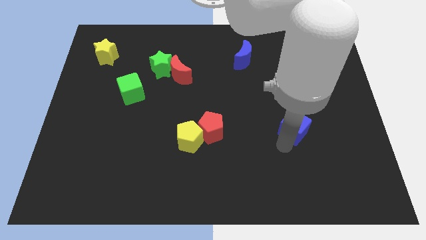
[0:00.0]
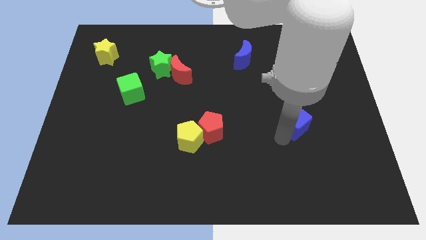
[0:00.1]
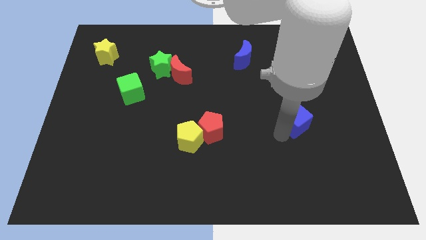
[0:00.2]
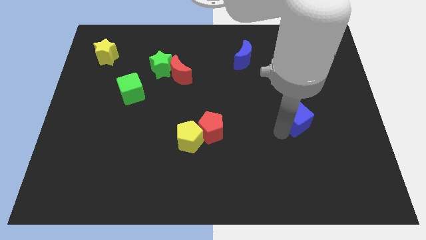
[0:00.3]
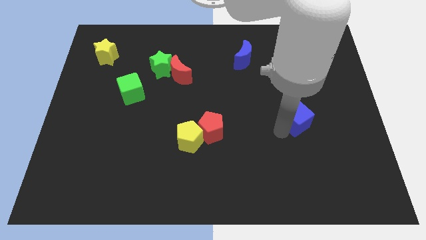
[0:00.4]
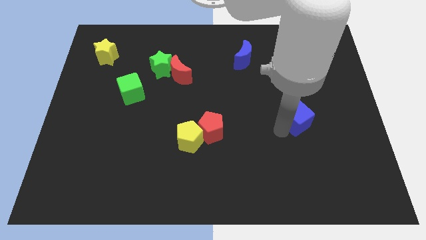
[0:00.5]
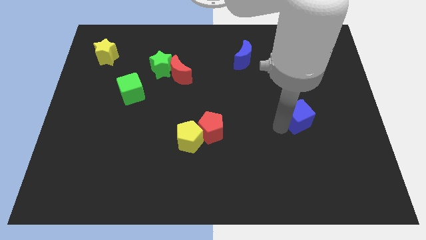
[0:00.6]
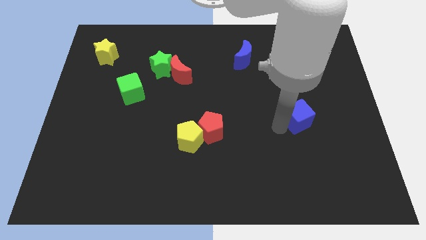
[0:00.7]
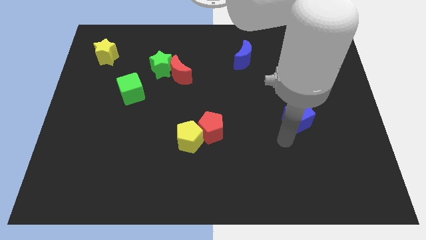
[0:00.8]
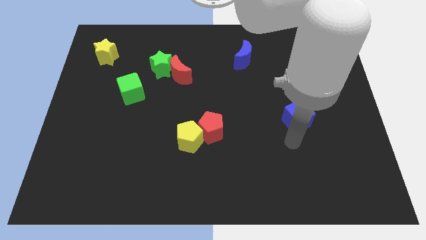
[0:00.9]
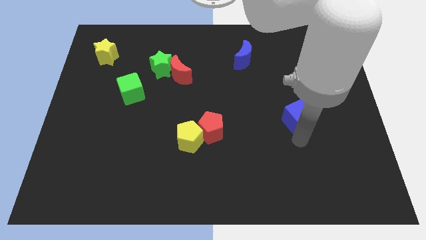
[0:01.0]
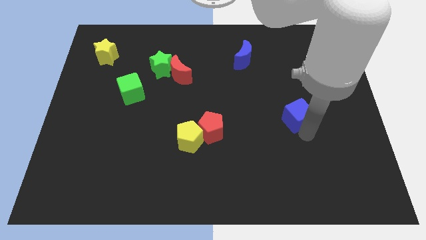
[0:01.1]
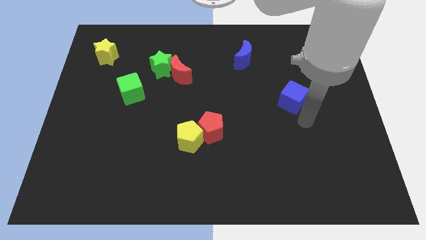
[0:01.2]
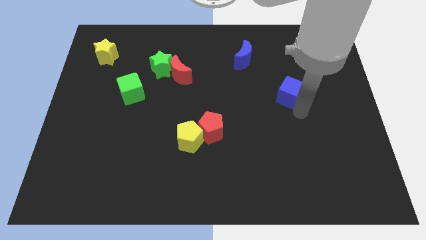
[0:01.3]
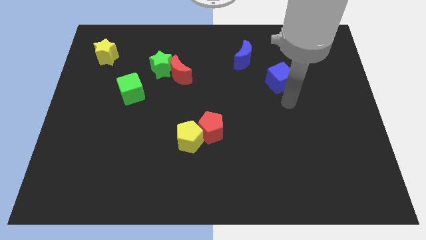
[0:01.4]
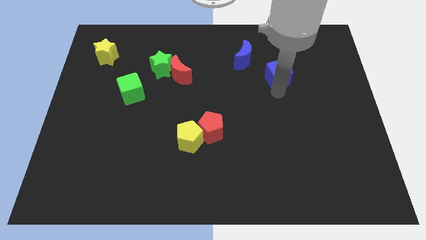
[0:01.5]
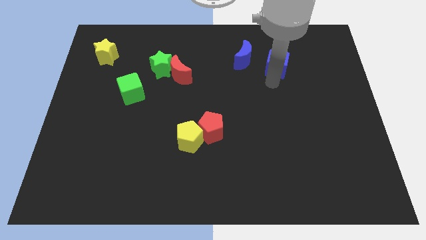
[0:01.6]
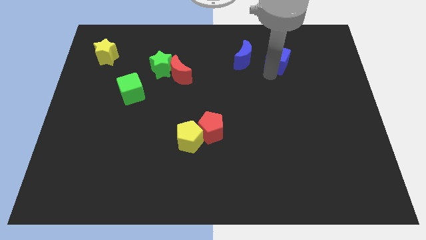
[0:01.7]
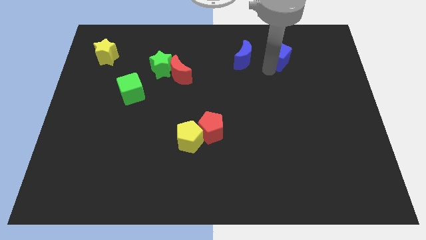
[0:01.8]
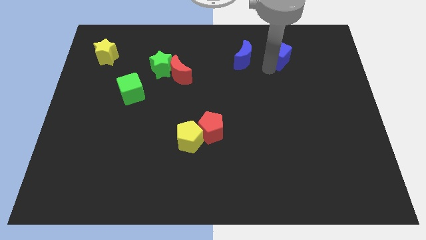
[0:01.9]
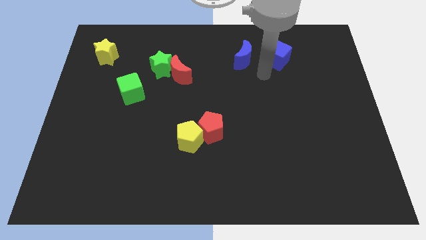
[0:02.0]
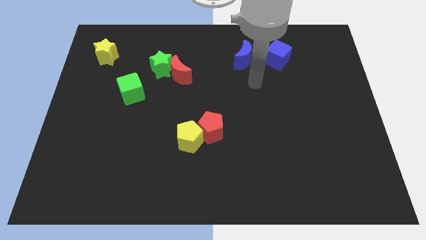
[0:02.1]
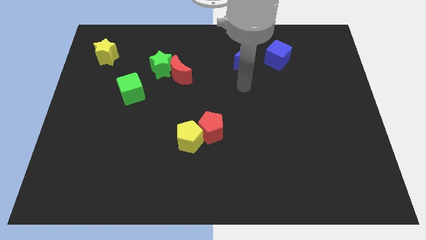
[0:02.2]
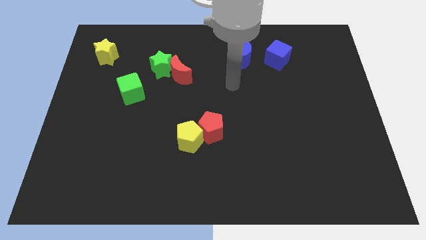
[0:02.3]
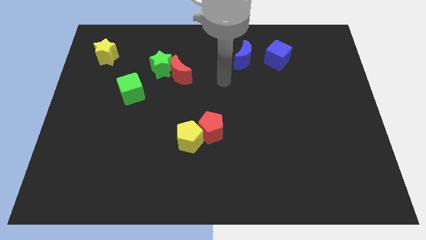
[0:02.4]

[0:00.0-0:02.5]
place the blue cube right to the blue moon

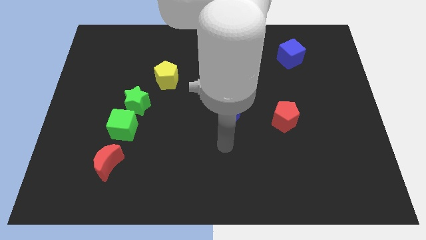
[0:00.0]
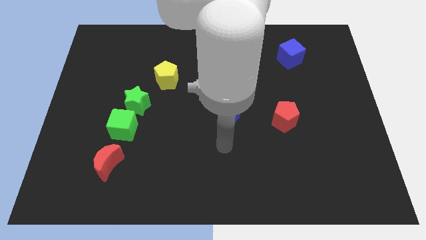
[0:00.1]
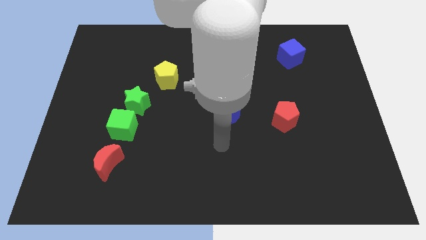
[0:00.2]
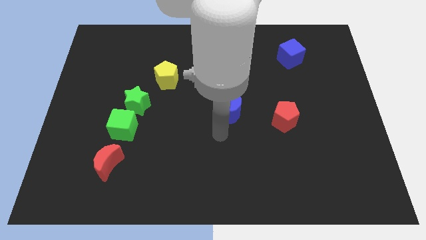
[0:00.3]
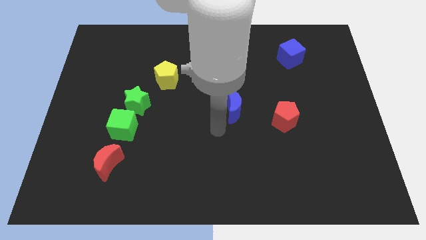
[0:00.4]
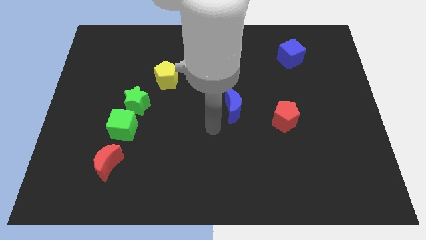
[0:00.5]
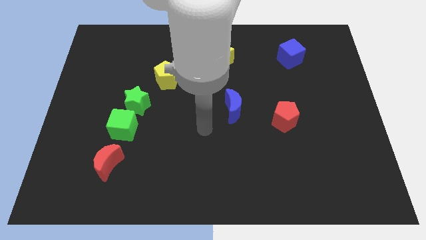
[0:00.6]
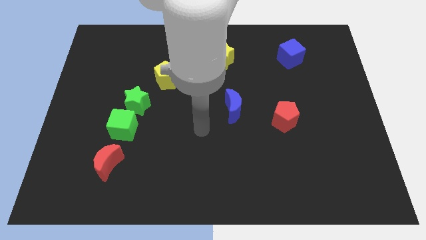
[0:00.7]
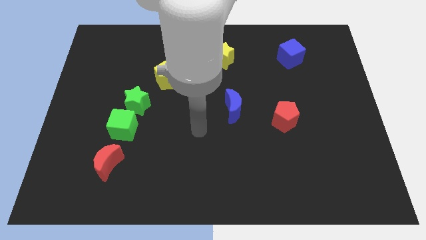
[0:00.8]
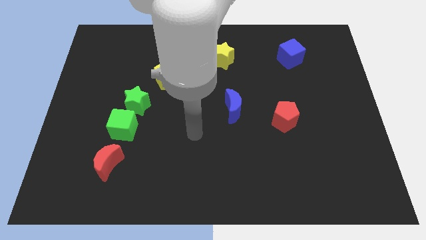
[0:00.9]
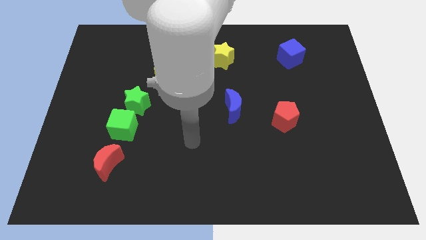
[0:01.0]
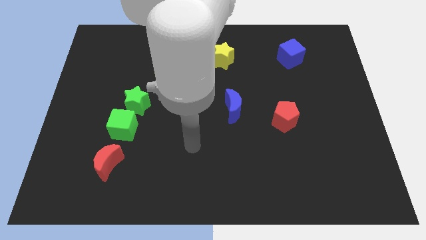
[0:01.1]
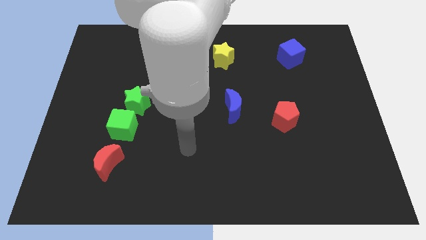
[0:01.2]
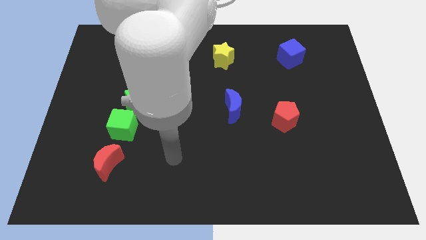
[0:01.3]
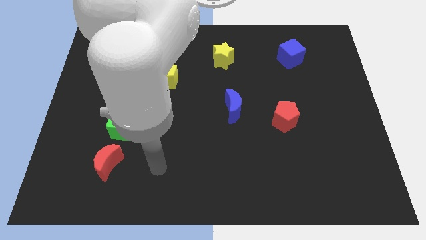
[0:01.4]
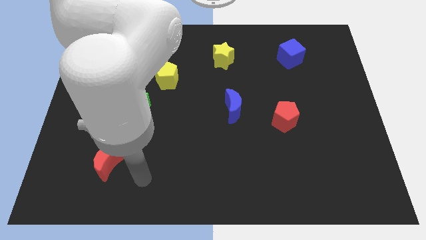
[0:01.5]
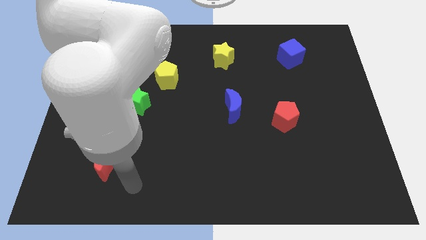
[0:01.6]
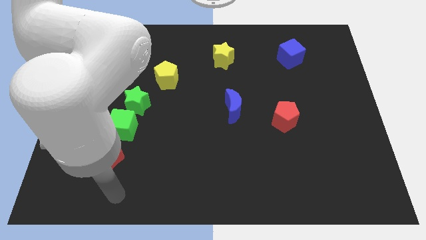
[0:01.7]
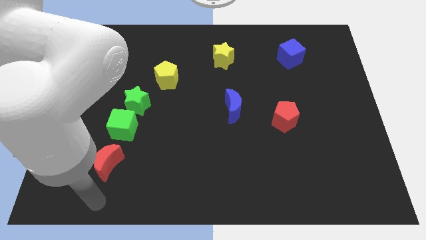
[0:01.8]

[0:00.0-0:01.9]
point your hand below the red moon

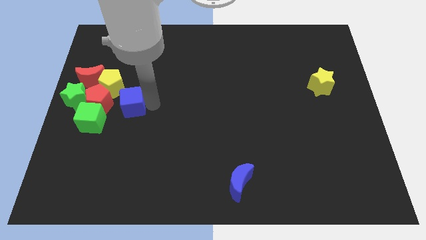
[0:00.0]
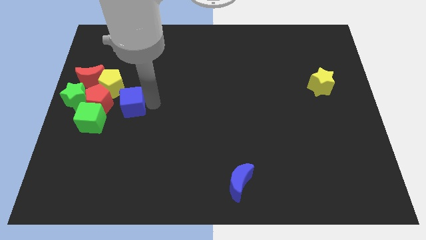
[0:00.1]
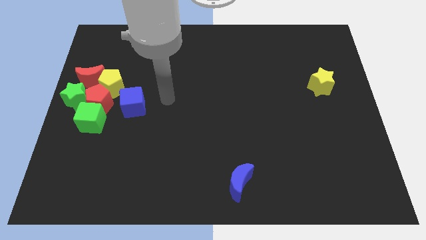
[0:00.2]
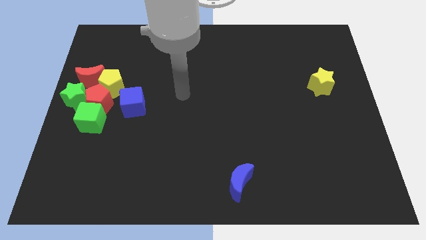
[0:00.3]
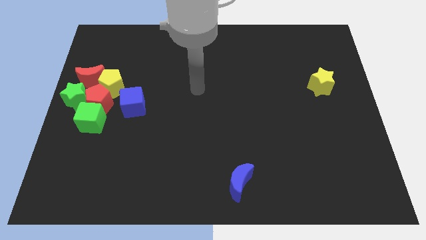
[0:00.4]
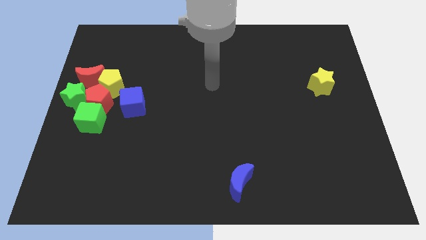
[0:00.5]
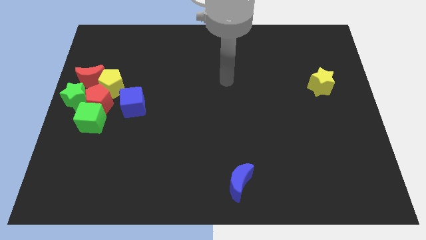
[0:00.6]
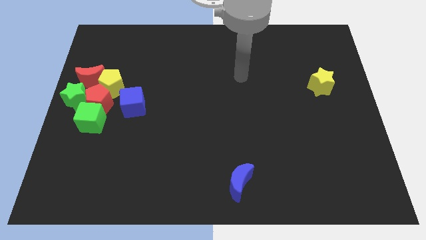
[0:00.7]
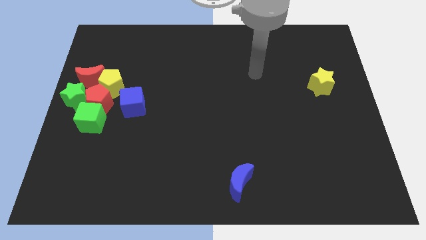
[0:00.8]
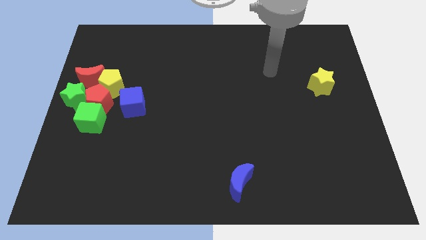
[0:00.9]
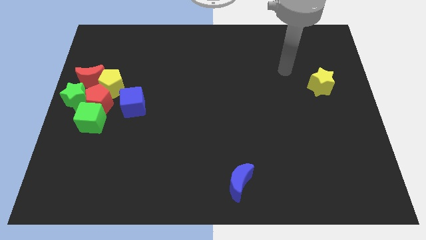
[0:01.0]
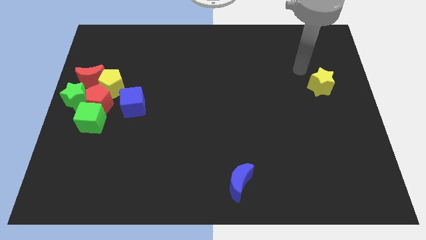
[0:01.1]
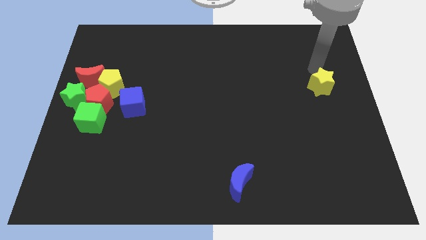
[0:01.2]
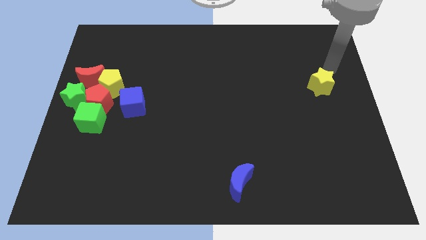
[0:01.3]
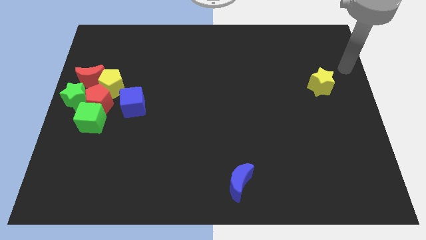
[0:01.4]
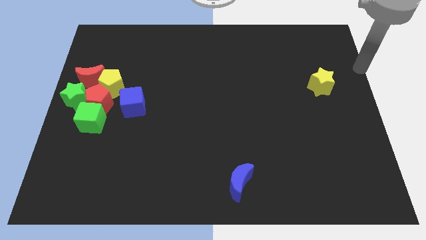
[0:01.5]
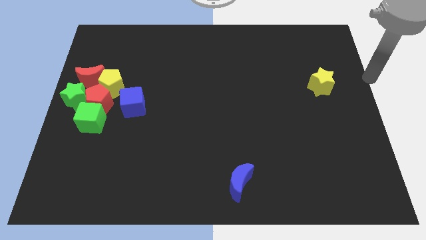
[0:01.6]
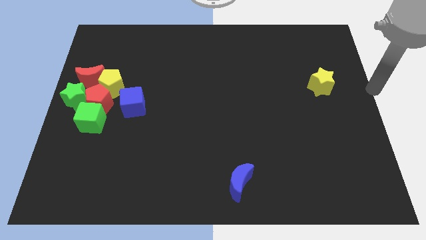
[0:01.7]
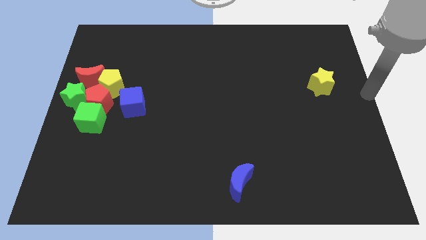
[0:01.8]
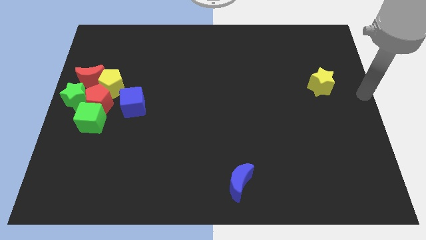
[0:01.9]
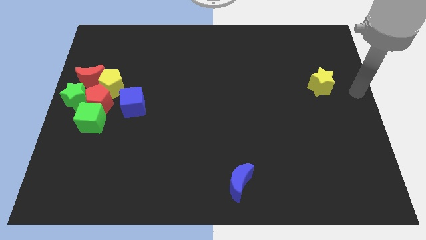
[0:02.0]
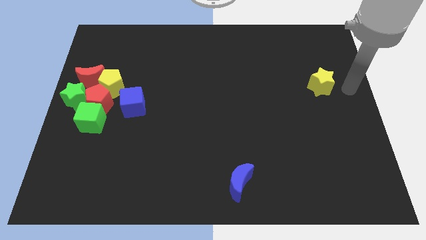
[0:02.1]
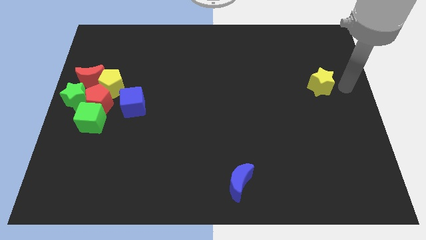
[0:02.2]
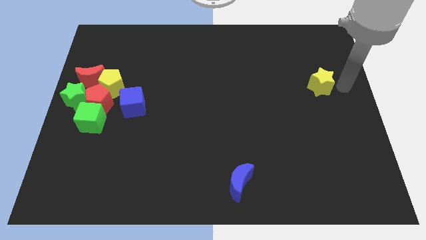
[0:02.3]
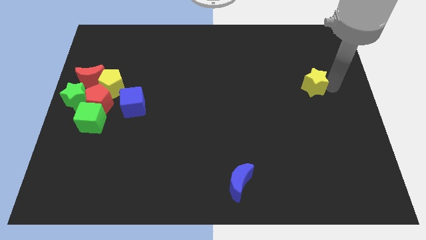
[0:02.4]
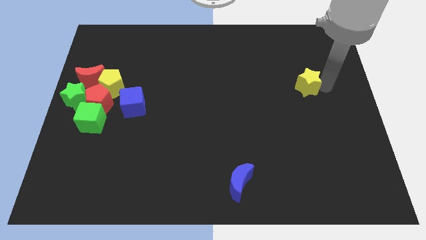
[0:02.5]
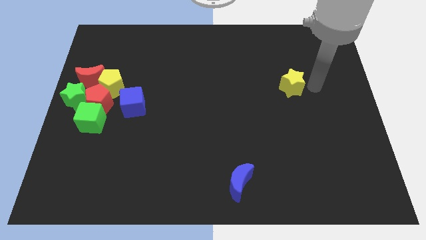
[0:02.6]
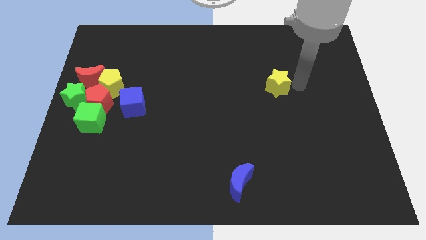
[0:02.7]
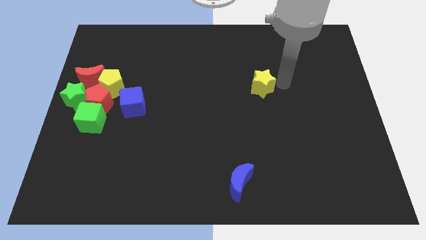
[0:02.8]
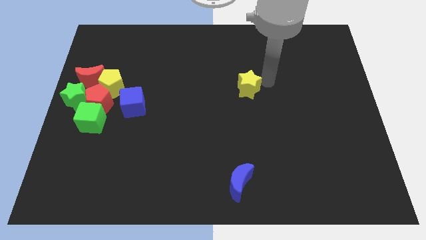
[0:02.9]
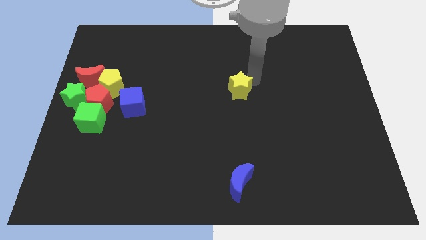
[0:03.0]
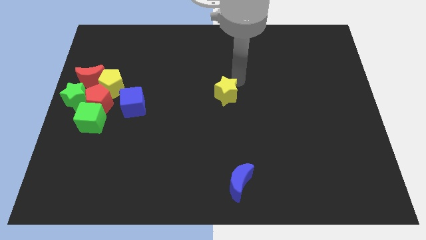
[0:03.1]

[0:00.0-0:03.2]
move the yellow star to the center side of the board

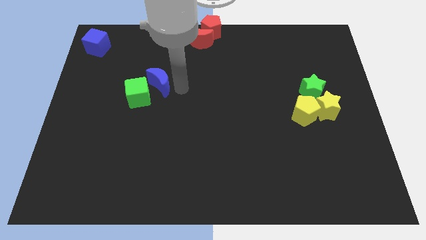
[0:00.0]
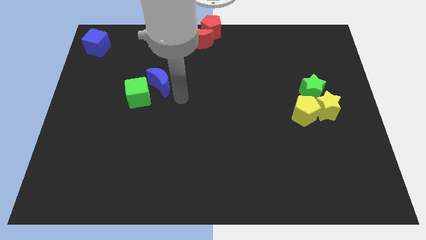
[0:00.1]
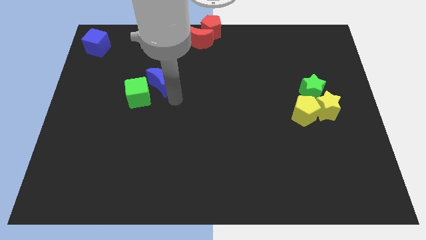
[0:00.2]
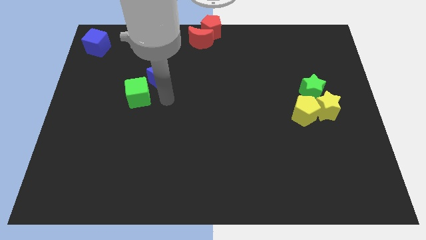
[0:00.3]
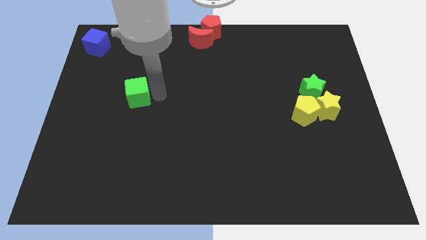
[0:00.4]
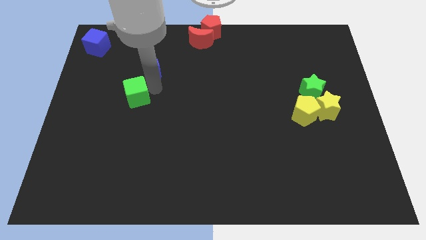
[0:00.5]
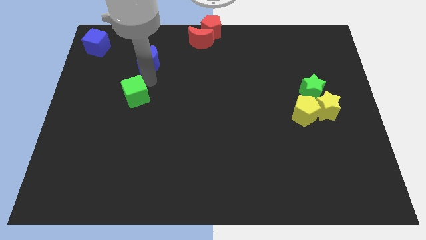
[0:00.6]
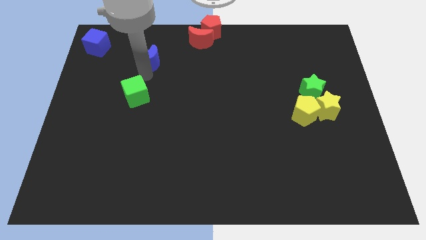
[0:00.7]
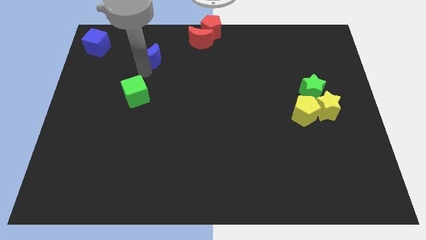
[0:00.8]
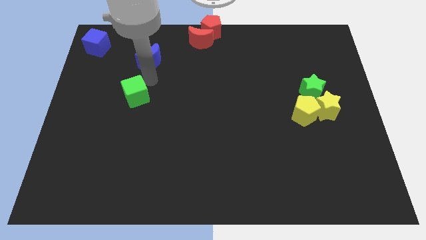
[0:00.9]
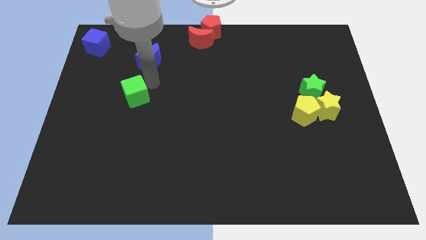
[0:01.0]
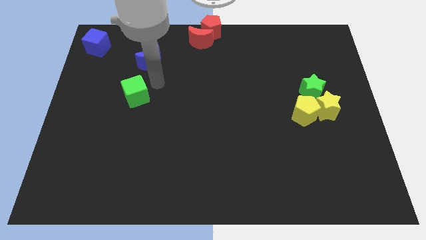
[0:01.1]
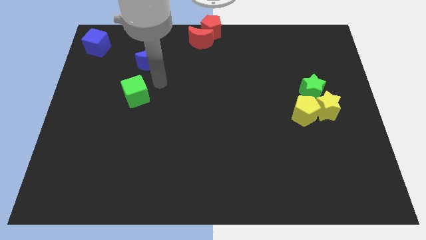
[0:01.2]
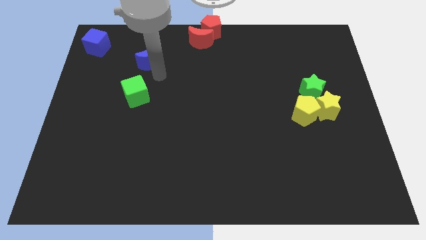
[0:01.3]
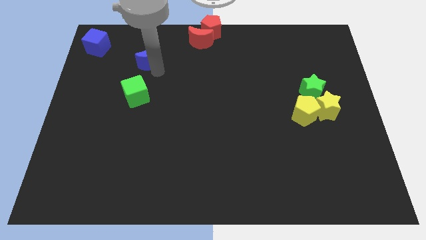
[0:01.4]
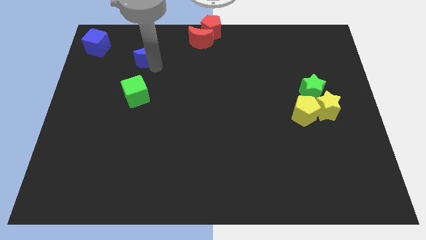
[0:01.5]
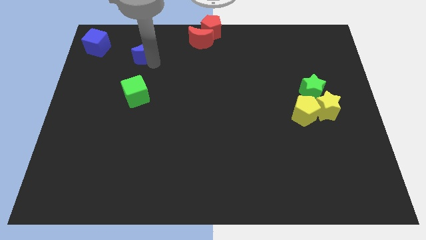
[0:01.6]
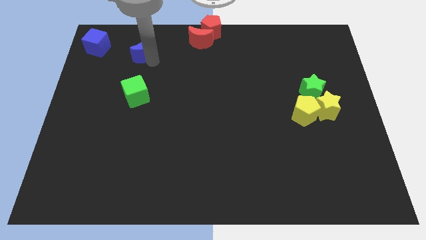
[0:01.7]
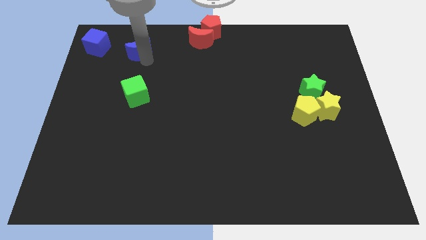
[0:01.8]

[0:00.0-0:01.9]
separate green cube and blue moon
